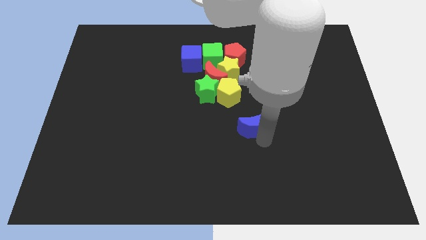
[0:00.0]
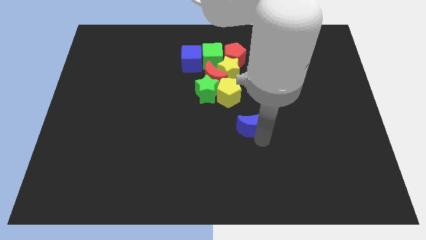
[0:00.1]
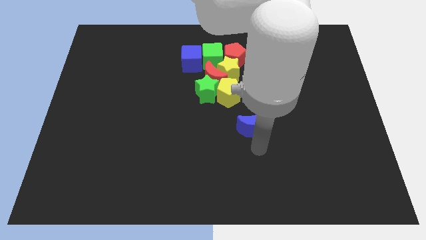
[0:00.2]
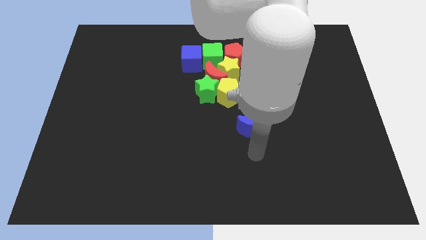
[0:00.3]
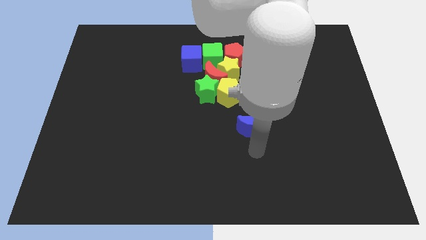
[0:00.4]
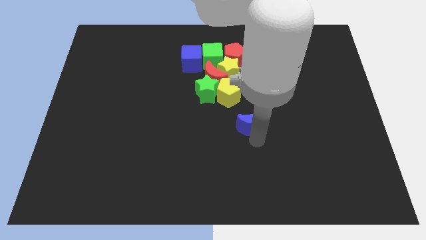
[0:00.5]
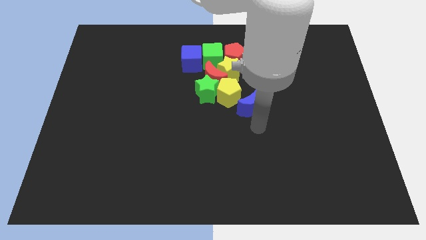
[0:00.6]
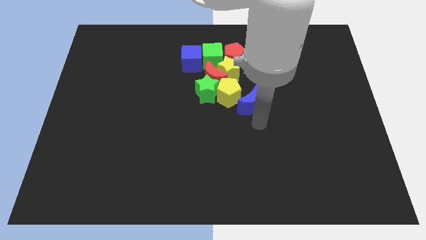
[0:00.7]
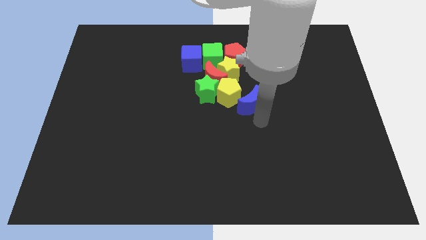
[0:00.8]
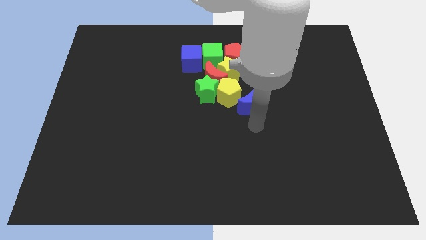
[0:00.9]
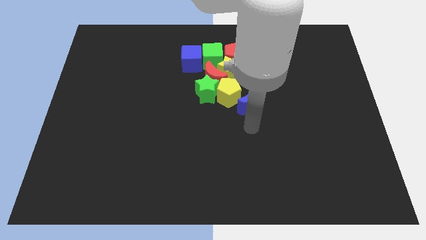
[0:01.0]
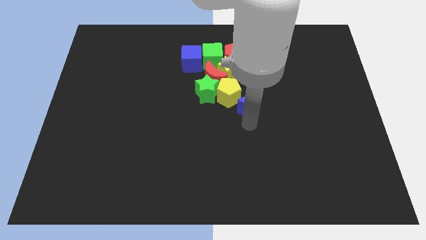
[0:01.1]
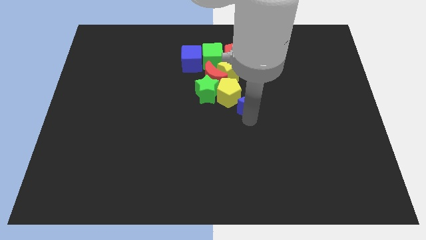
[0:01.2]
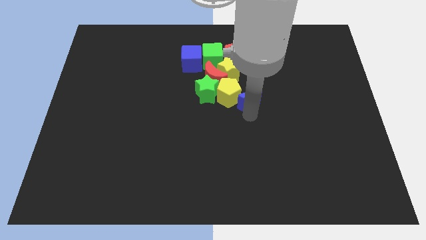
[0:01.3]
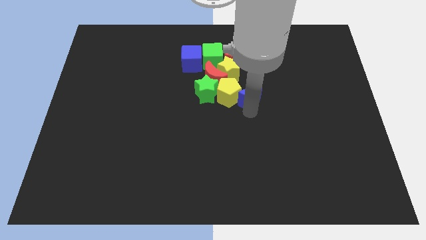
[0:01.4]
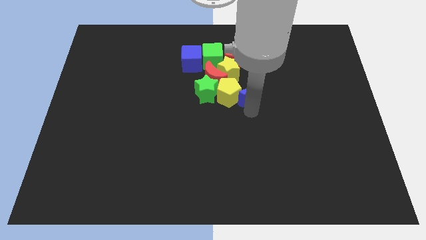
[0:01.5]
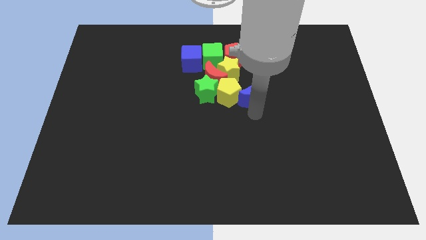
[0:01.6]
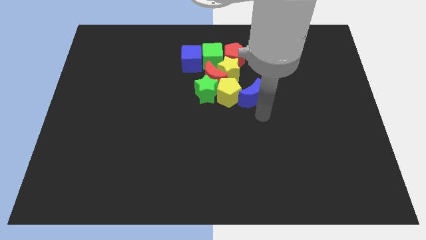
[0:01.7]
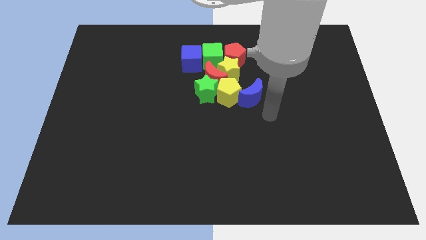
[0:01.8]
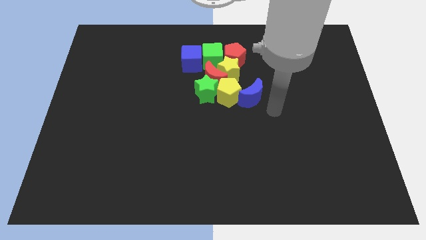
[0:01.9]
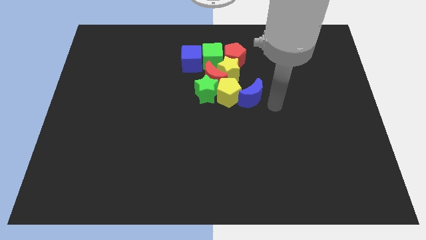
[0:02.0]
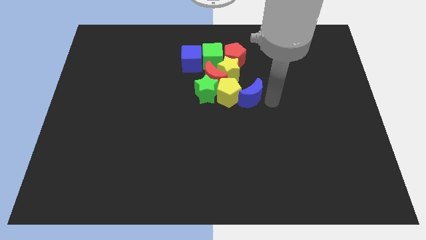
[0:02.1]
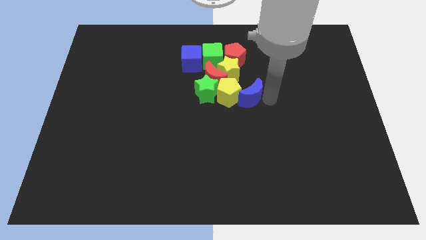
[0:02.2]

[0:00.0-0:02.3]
move the blue crescent to the right side of the yellow pentagon

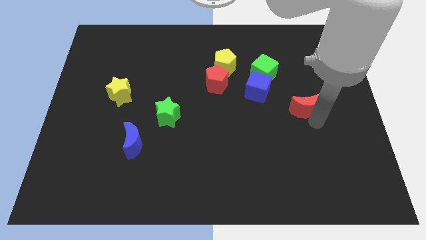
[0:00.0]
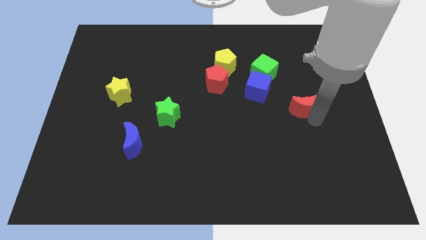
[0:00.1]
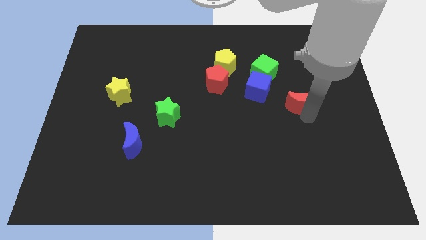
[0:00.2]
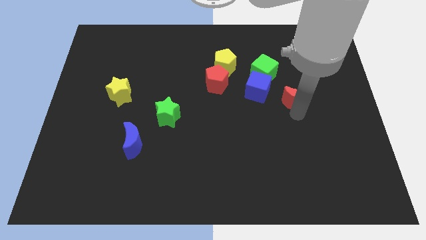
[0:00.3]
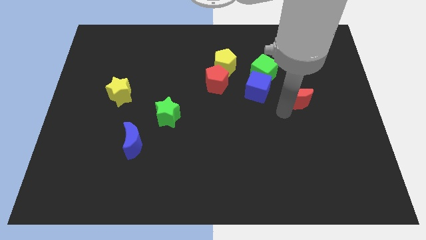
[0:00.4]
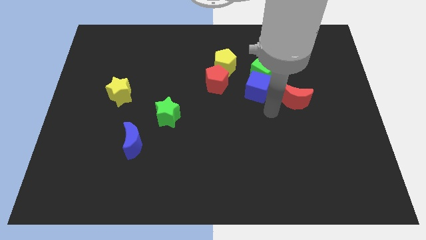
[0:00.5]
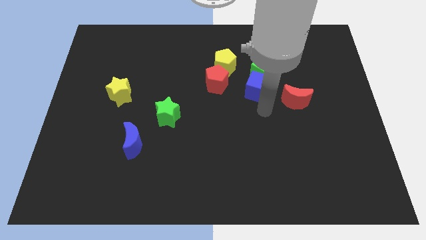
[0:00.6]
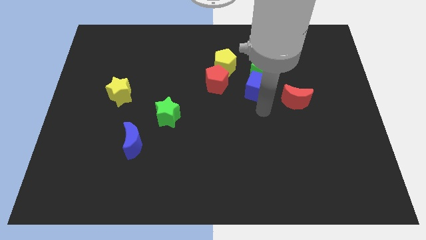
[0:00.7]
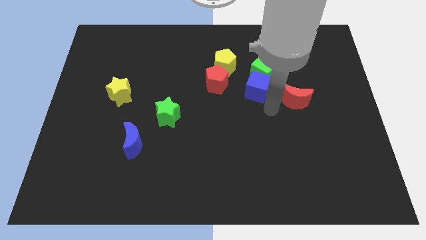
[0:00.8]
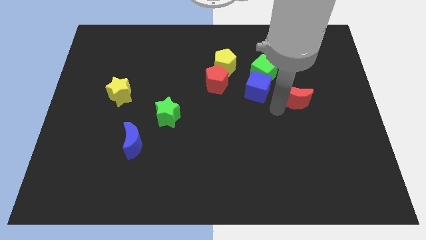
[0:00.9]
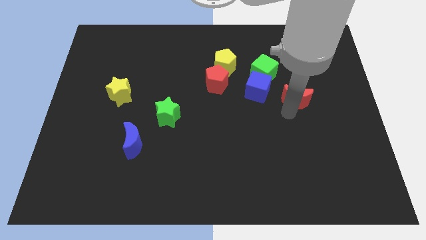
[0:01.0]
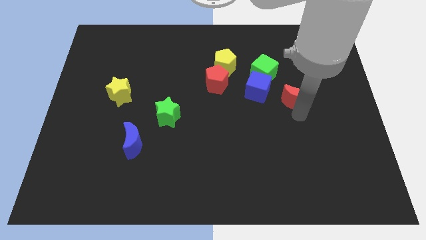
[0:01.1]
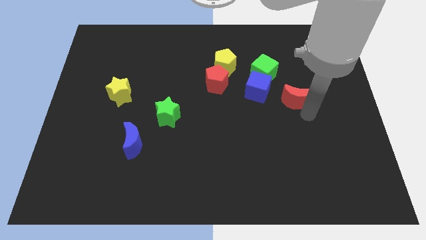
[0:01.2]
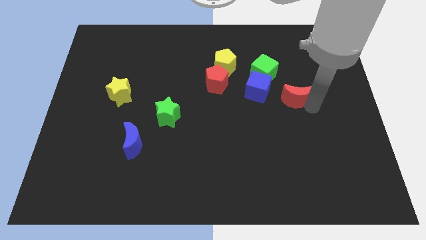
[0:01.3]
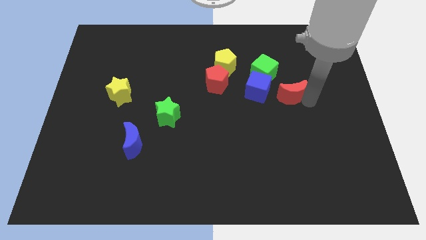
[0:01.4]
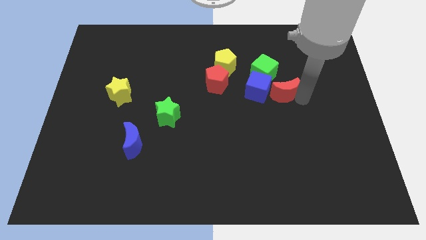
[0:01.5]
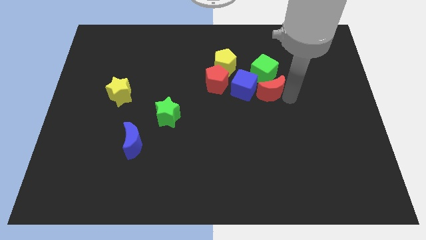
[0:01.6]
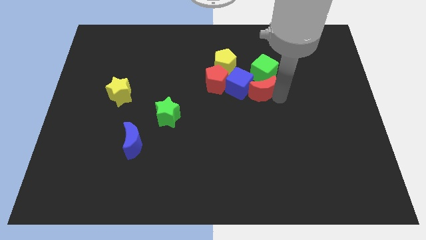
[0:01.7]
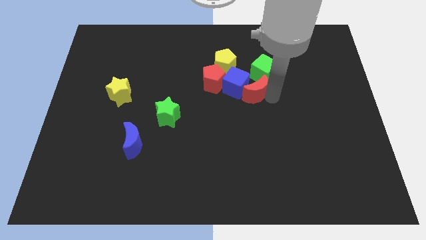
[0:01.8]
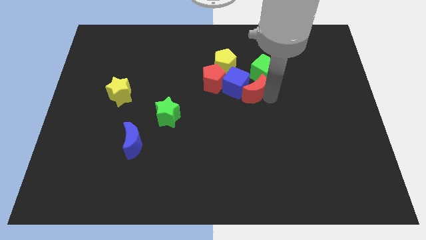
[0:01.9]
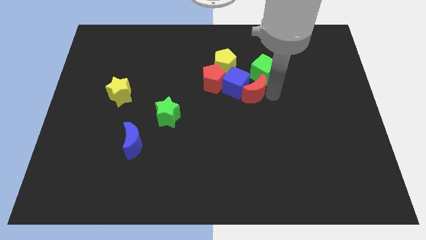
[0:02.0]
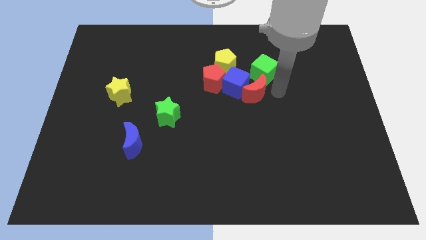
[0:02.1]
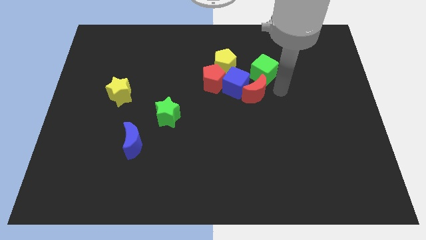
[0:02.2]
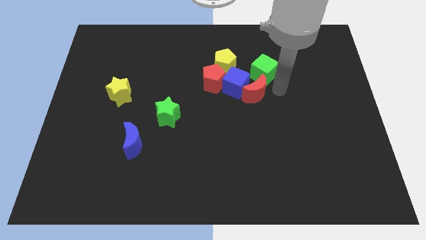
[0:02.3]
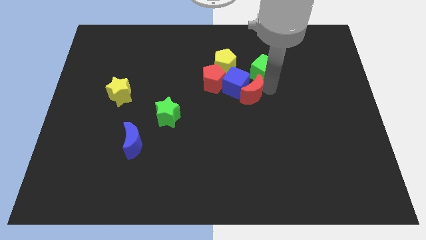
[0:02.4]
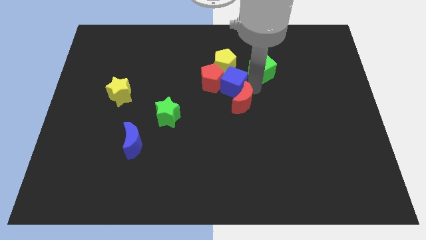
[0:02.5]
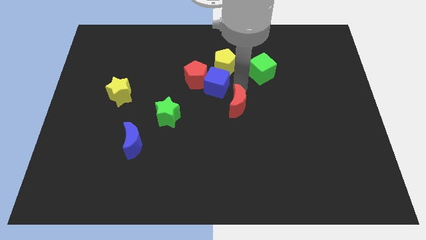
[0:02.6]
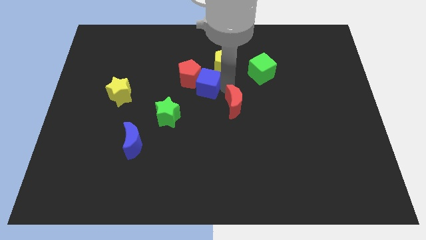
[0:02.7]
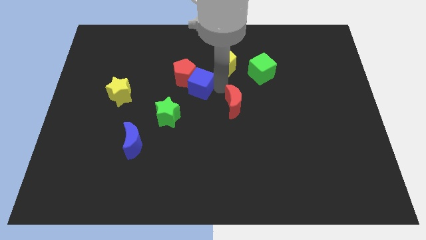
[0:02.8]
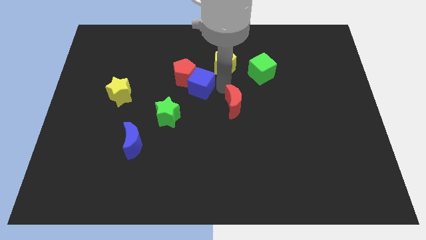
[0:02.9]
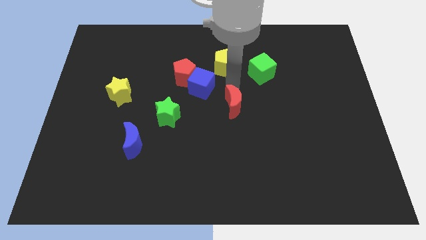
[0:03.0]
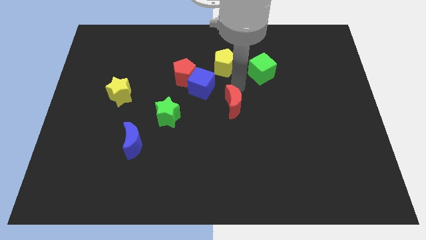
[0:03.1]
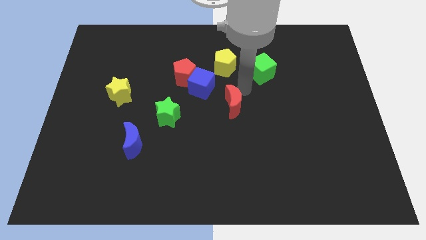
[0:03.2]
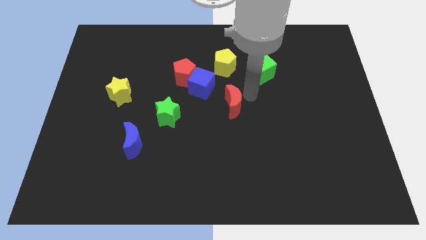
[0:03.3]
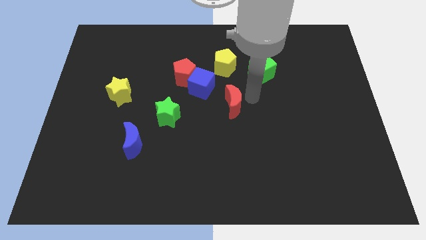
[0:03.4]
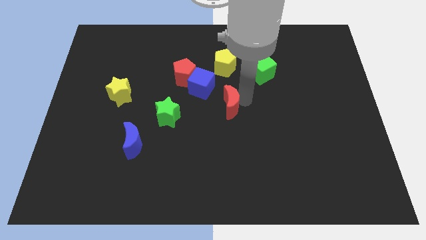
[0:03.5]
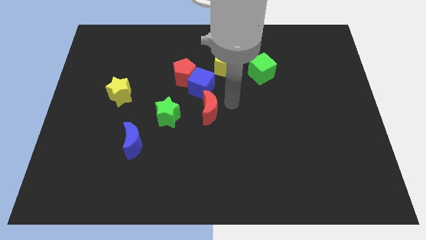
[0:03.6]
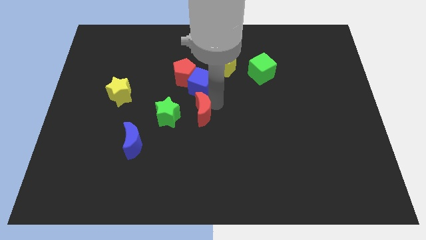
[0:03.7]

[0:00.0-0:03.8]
push the red crescent into the blue cube

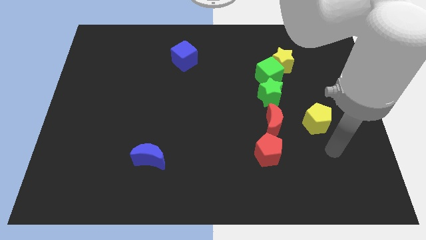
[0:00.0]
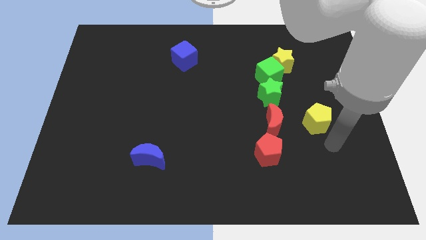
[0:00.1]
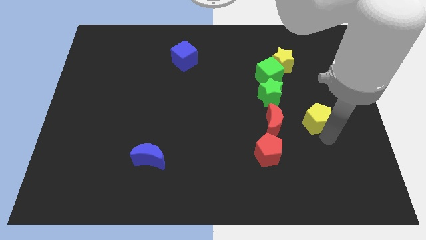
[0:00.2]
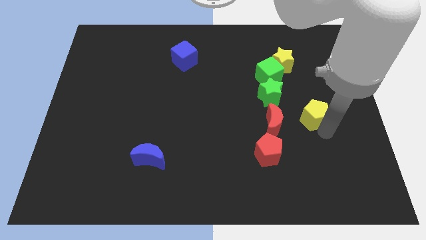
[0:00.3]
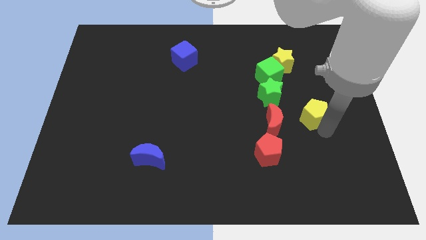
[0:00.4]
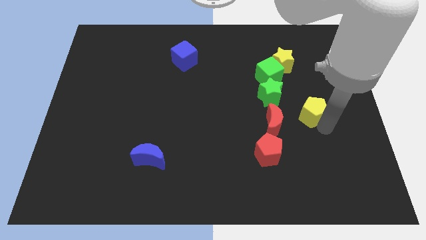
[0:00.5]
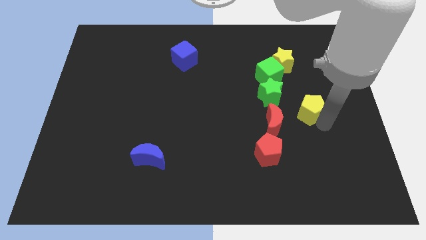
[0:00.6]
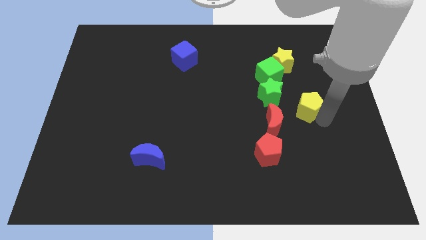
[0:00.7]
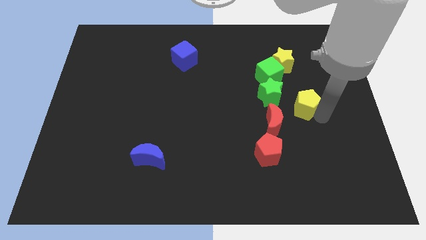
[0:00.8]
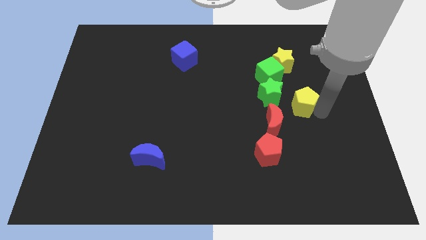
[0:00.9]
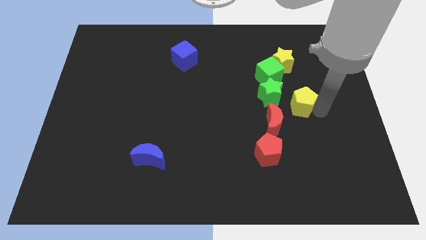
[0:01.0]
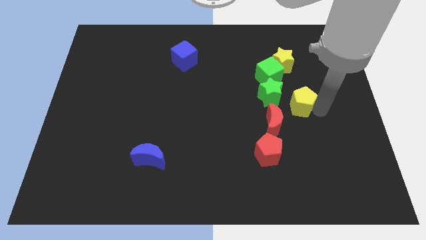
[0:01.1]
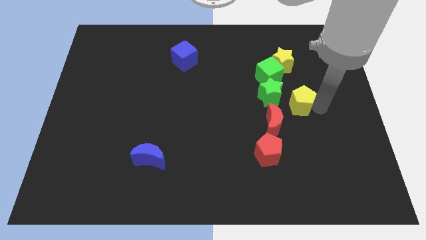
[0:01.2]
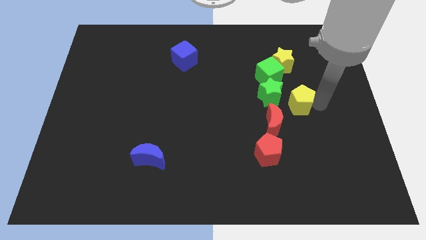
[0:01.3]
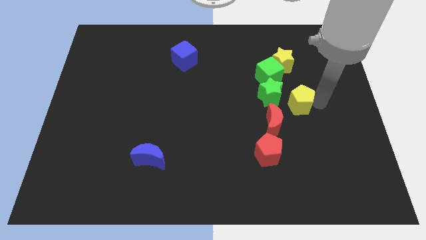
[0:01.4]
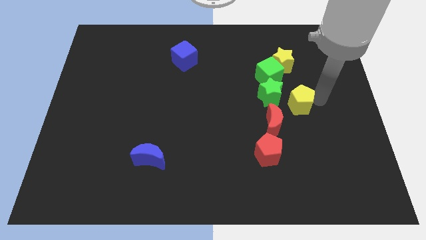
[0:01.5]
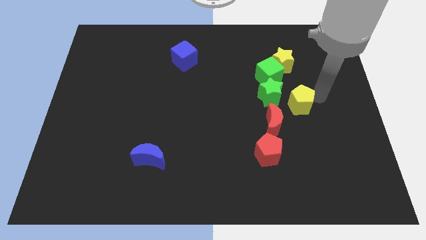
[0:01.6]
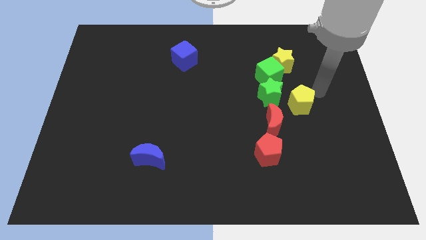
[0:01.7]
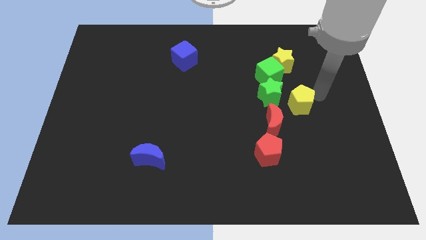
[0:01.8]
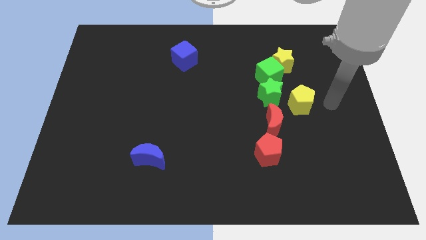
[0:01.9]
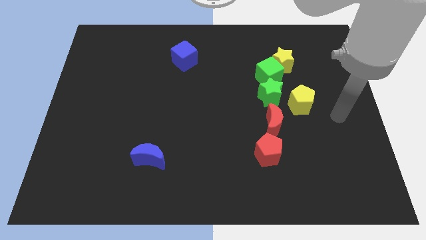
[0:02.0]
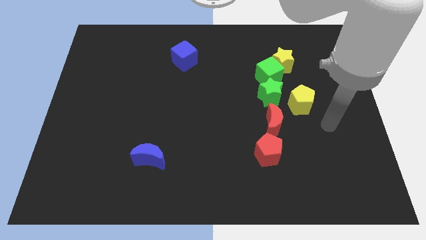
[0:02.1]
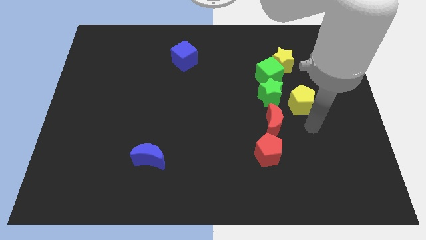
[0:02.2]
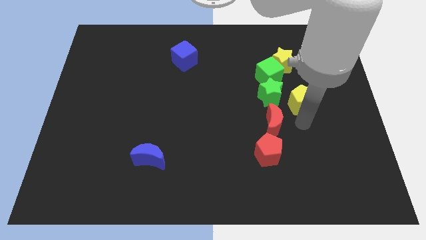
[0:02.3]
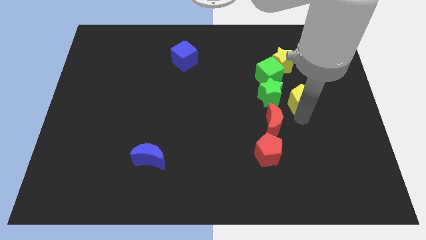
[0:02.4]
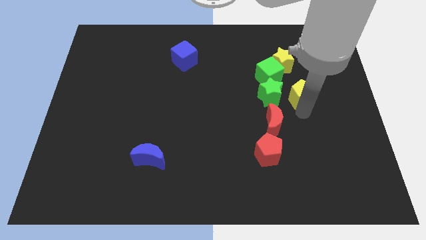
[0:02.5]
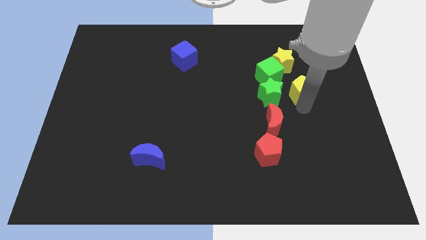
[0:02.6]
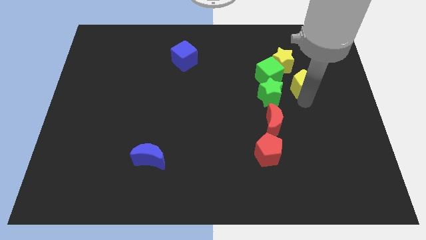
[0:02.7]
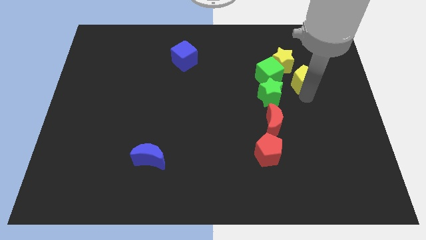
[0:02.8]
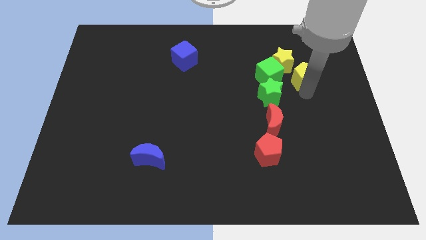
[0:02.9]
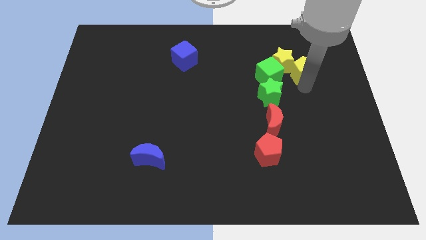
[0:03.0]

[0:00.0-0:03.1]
move yellow pentagon to the right of green cube

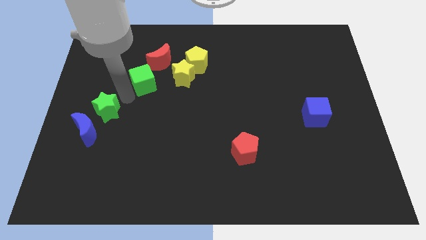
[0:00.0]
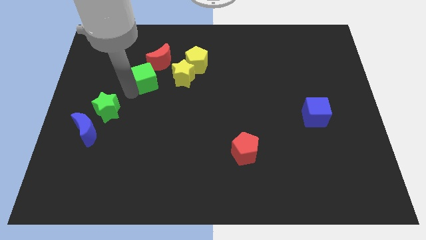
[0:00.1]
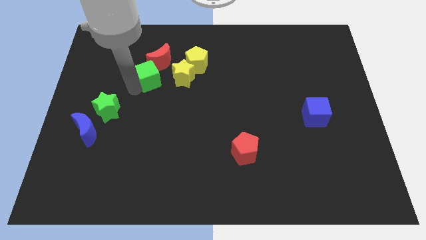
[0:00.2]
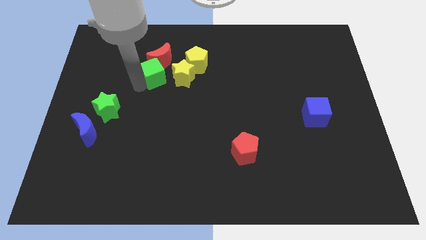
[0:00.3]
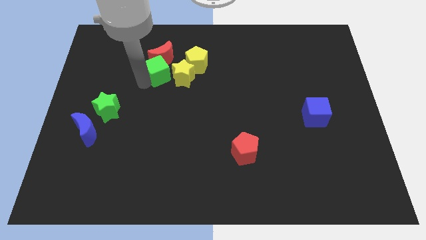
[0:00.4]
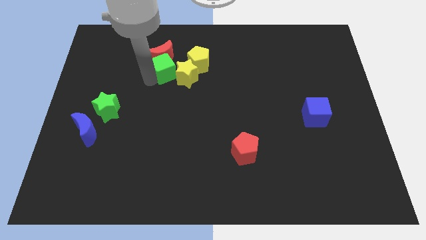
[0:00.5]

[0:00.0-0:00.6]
move the green cube towards the left side of the yellow star
